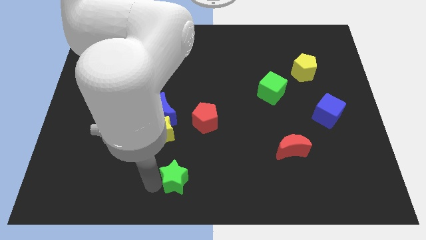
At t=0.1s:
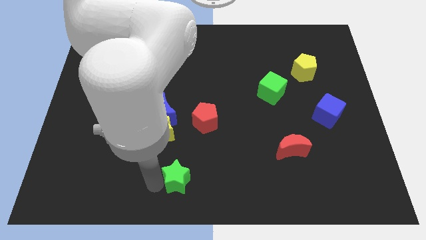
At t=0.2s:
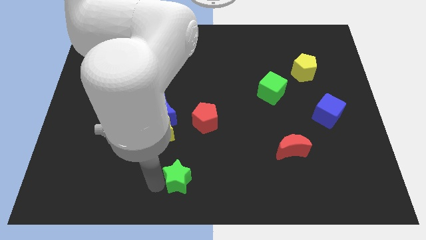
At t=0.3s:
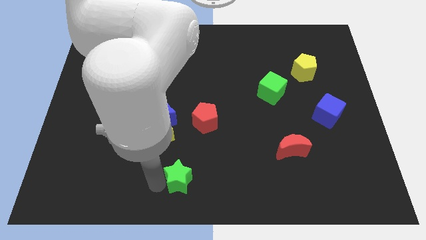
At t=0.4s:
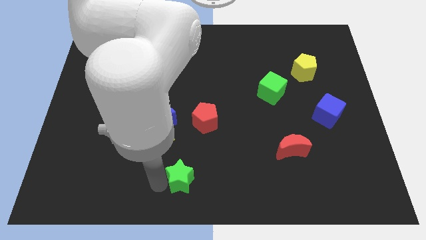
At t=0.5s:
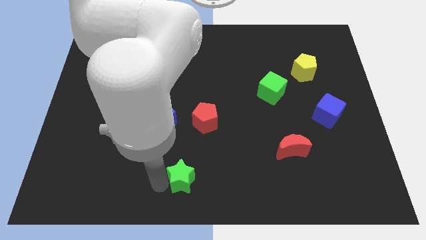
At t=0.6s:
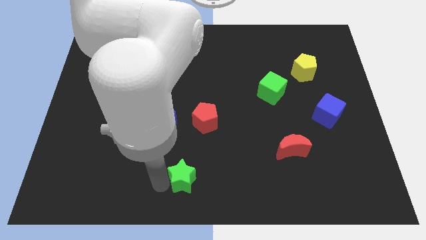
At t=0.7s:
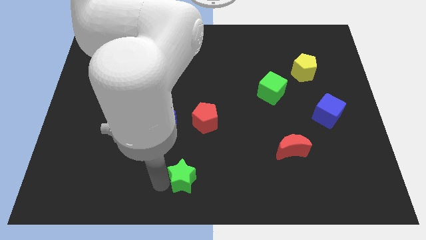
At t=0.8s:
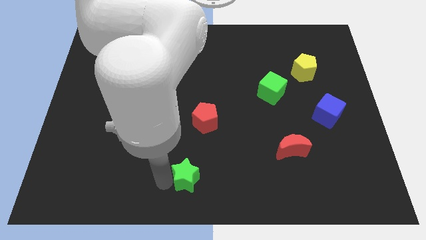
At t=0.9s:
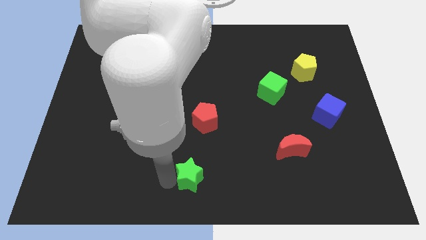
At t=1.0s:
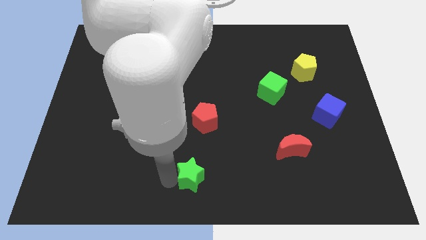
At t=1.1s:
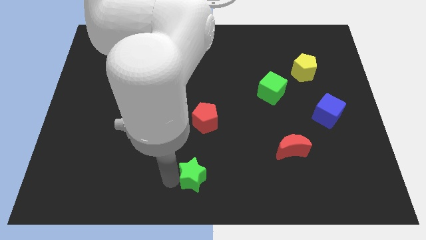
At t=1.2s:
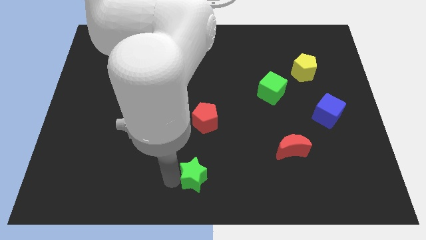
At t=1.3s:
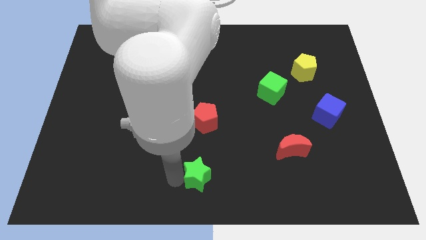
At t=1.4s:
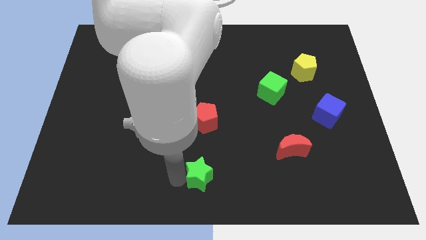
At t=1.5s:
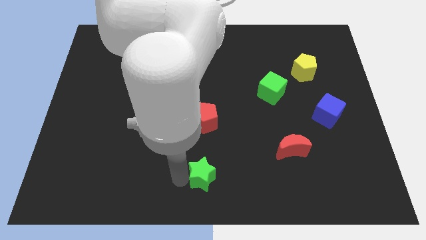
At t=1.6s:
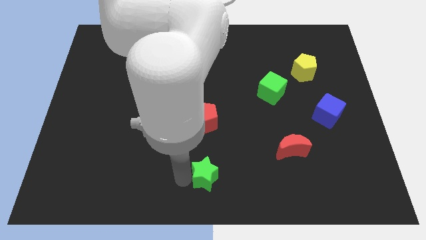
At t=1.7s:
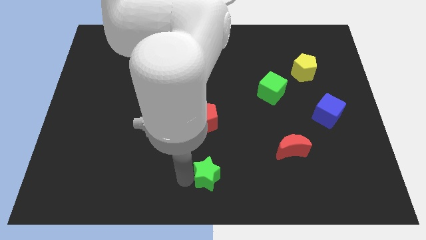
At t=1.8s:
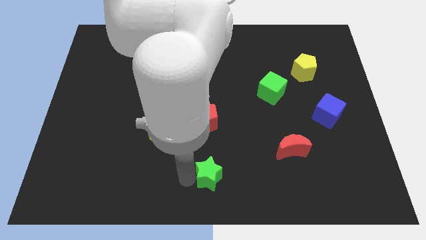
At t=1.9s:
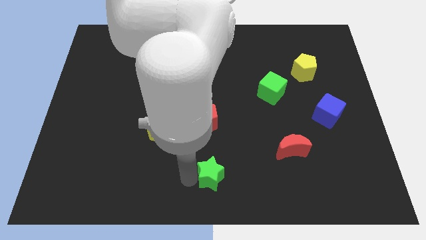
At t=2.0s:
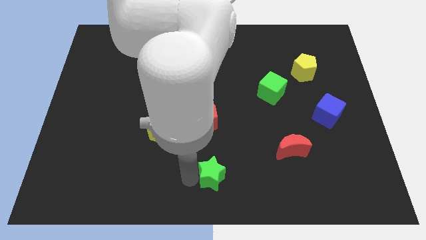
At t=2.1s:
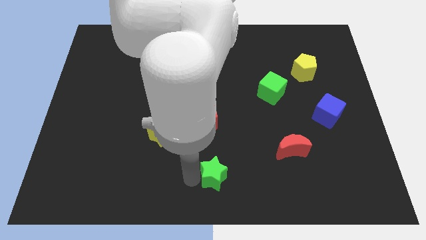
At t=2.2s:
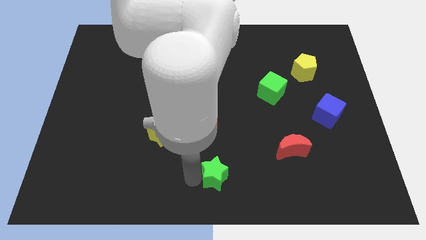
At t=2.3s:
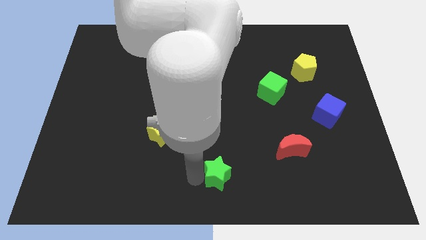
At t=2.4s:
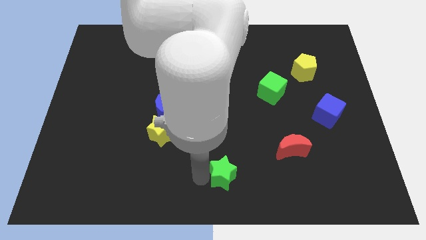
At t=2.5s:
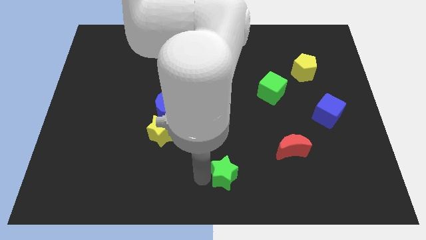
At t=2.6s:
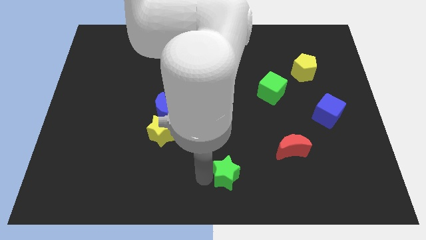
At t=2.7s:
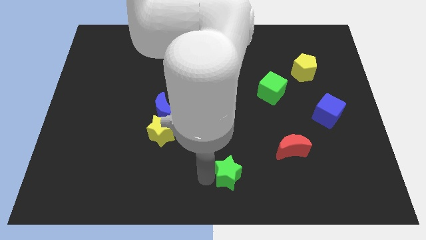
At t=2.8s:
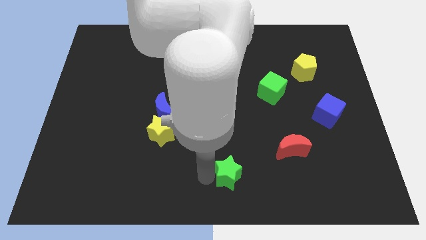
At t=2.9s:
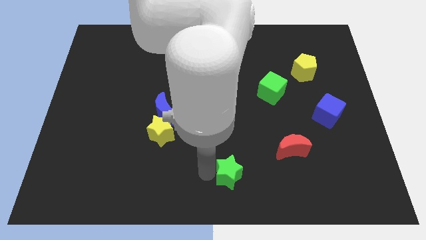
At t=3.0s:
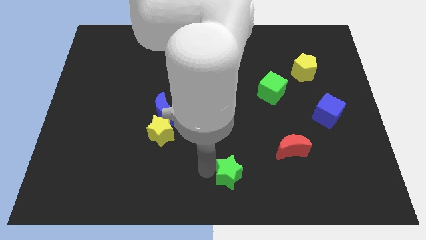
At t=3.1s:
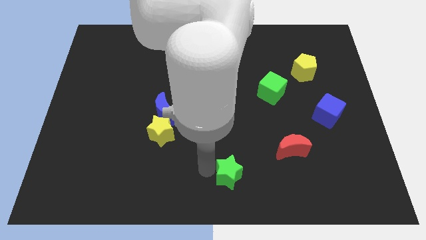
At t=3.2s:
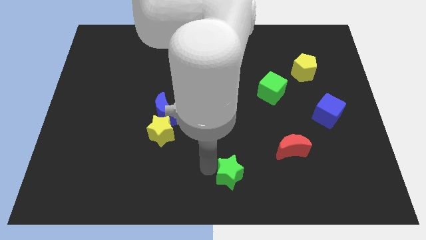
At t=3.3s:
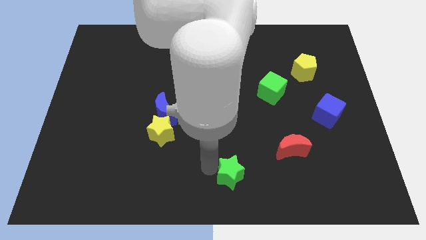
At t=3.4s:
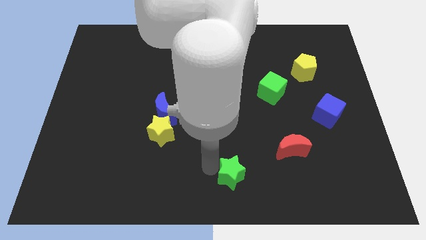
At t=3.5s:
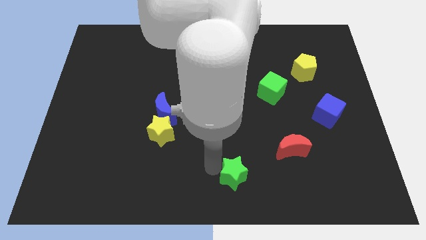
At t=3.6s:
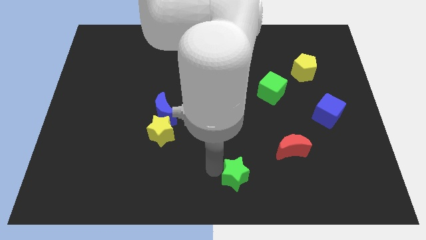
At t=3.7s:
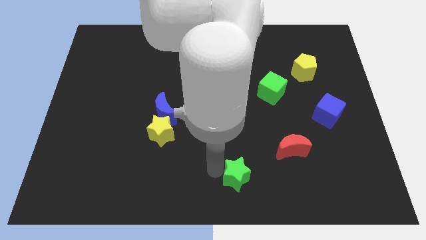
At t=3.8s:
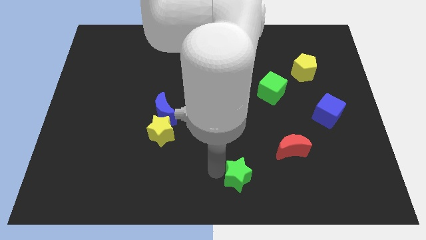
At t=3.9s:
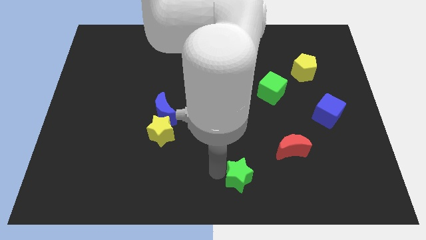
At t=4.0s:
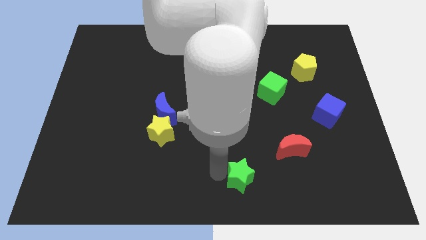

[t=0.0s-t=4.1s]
move the green star to the right

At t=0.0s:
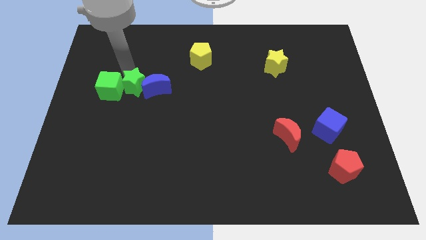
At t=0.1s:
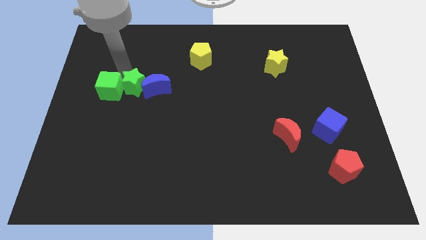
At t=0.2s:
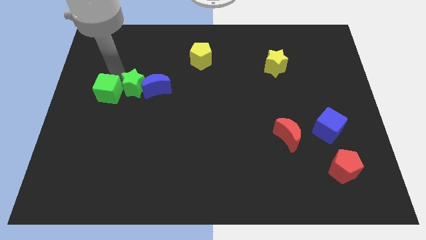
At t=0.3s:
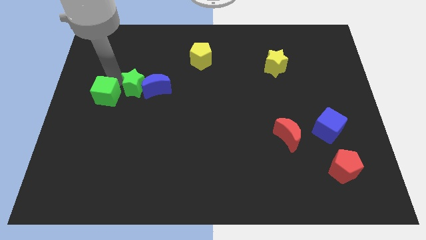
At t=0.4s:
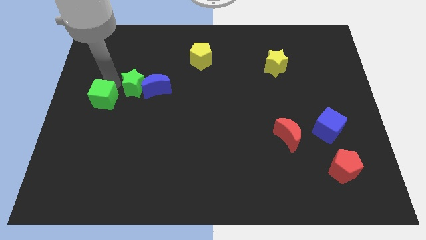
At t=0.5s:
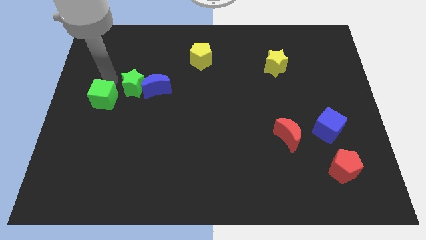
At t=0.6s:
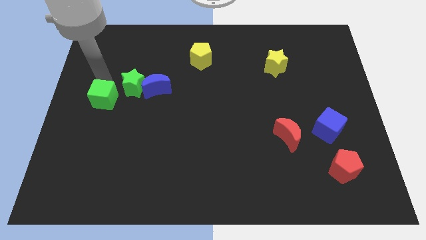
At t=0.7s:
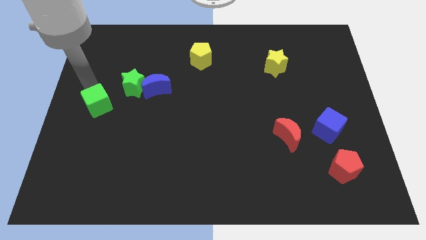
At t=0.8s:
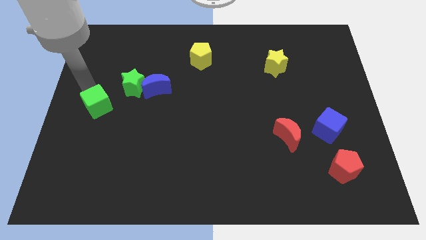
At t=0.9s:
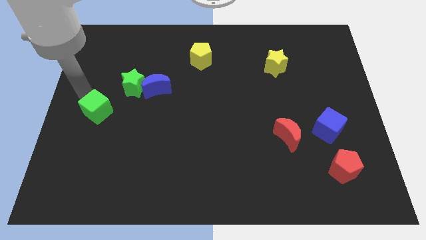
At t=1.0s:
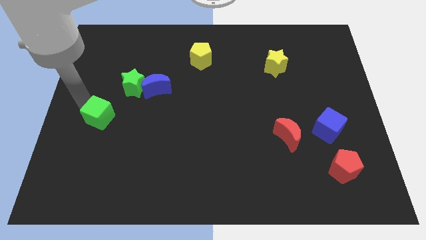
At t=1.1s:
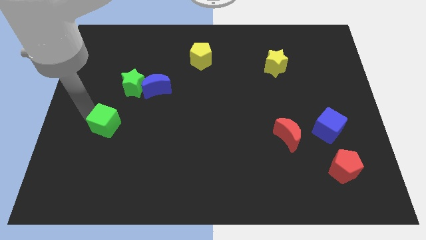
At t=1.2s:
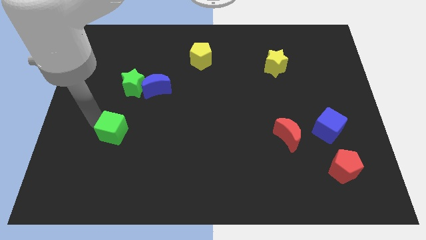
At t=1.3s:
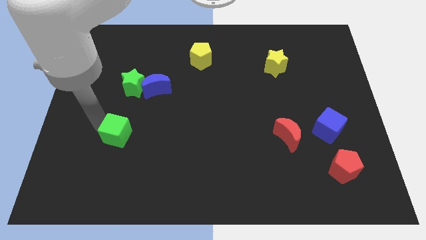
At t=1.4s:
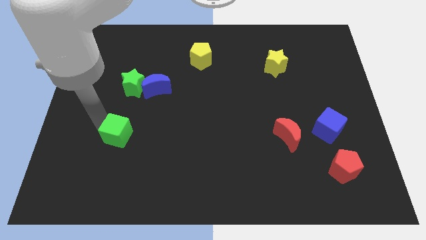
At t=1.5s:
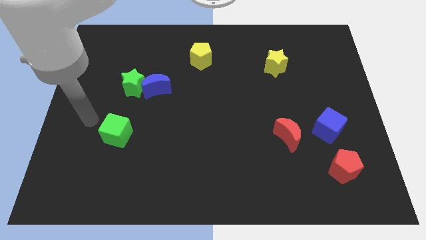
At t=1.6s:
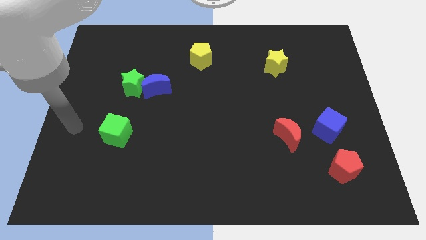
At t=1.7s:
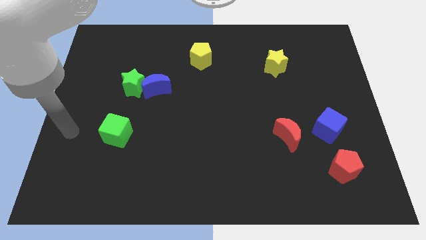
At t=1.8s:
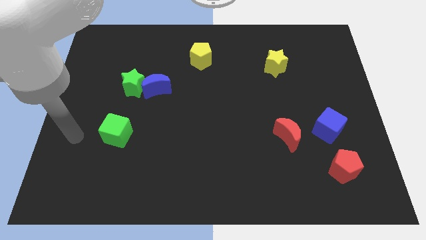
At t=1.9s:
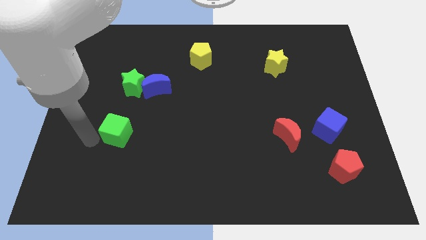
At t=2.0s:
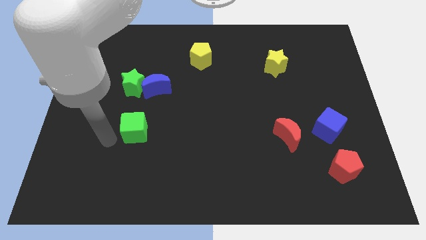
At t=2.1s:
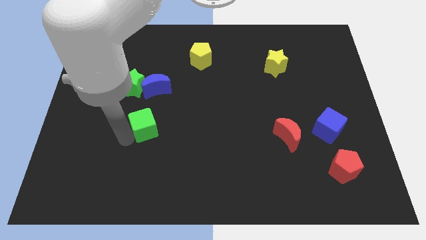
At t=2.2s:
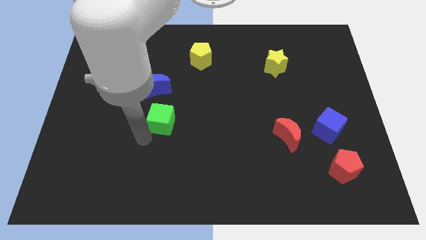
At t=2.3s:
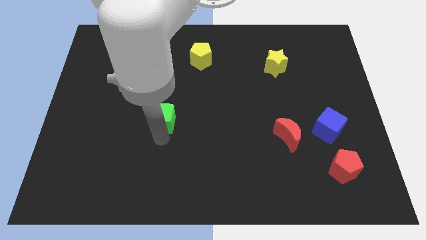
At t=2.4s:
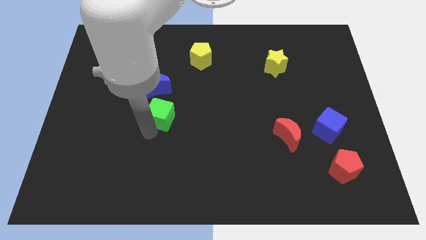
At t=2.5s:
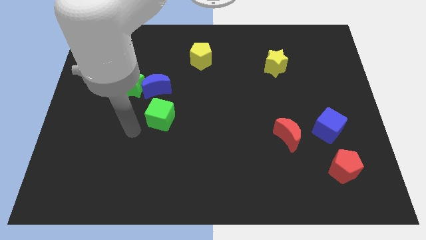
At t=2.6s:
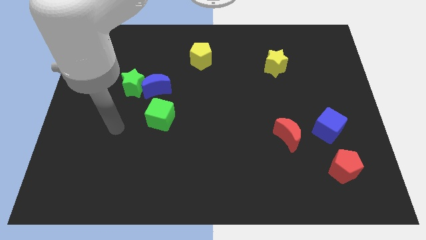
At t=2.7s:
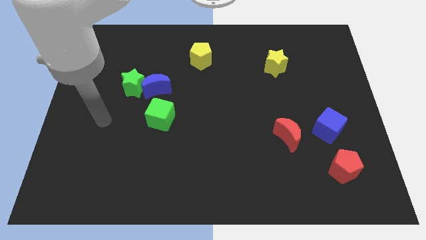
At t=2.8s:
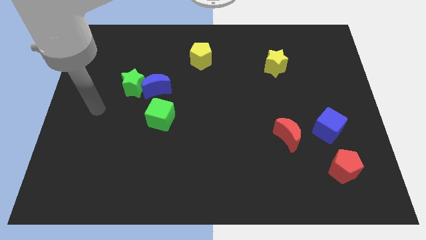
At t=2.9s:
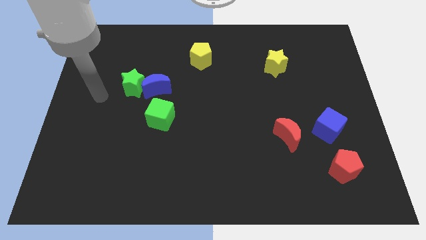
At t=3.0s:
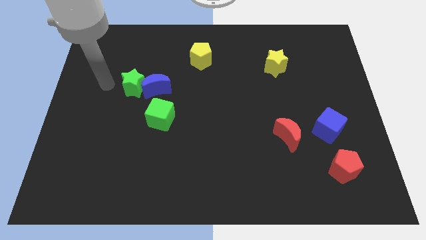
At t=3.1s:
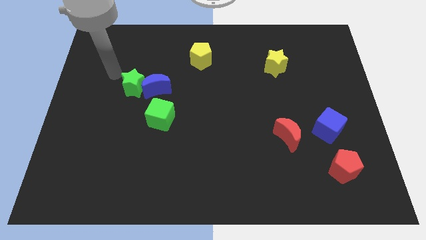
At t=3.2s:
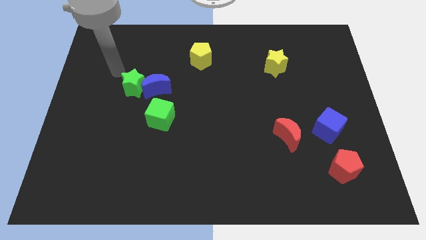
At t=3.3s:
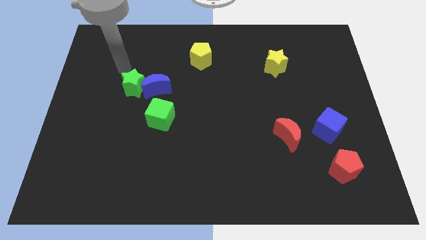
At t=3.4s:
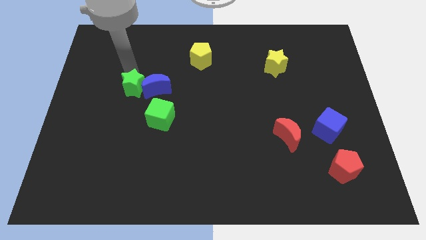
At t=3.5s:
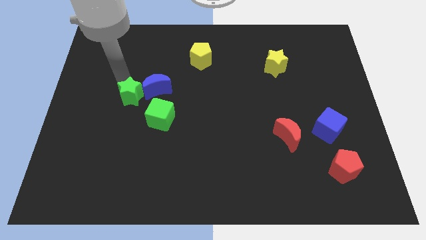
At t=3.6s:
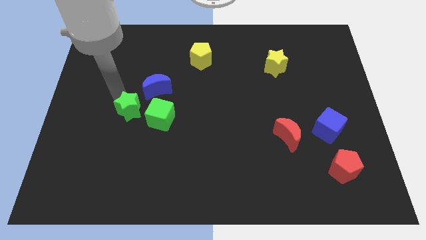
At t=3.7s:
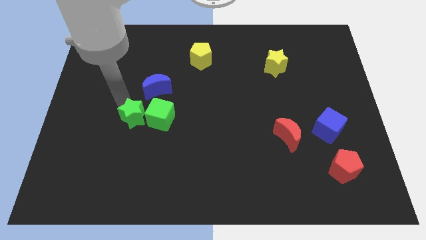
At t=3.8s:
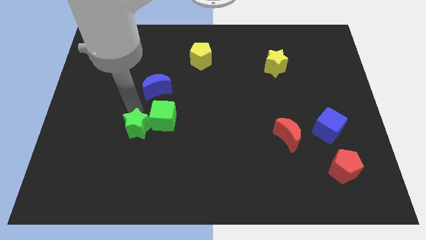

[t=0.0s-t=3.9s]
separate the green blocks from the blue crescent

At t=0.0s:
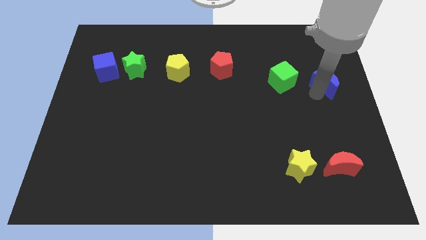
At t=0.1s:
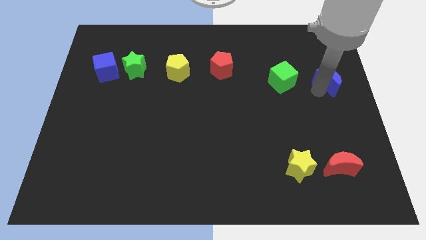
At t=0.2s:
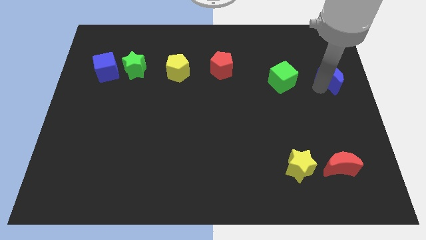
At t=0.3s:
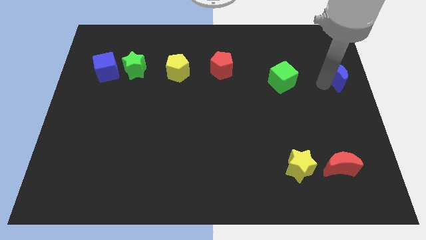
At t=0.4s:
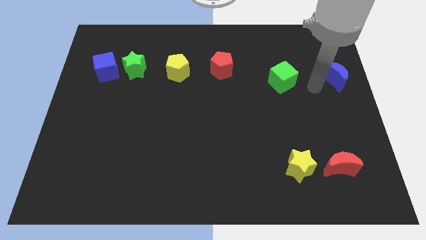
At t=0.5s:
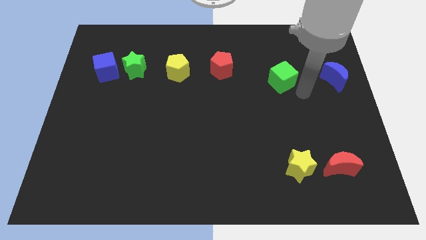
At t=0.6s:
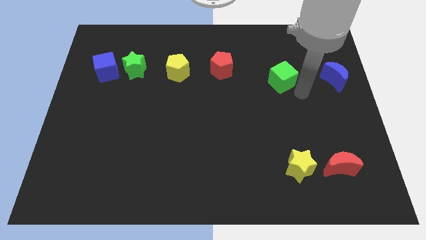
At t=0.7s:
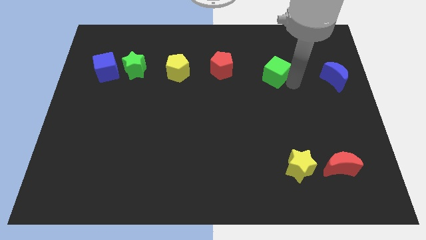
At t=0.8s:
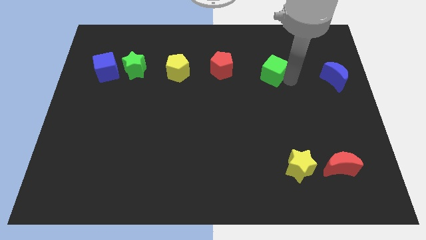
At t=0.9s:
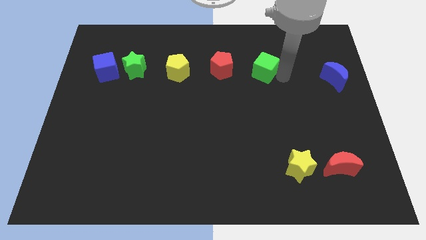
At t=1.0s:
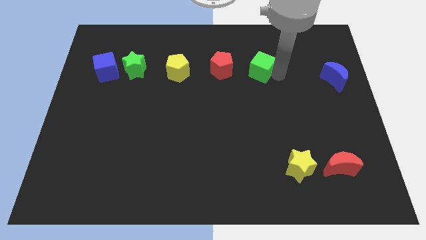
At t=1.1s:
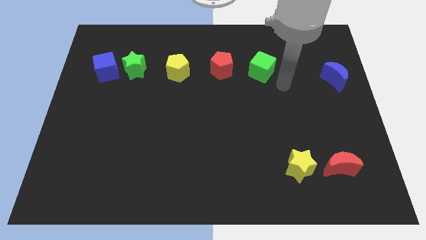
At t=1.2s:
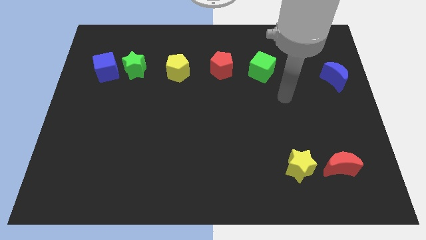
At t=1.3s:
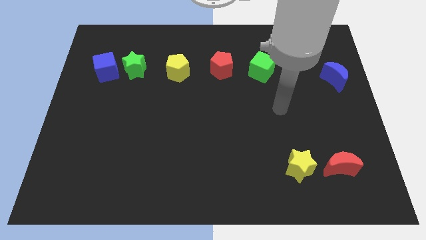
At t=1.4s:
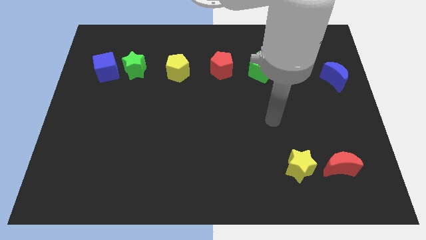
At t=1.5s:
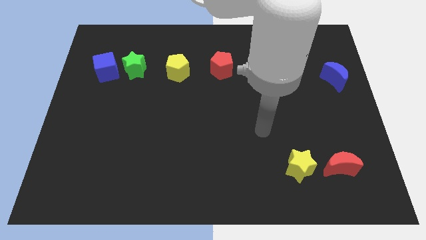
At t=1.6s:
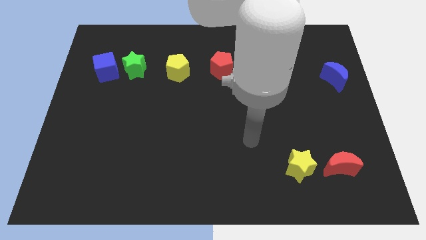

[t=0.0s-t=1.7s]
place the green cube towards the right of the red pentagon
